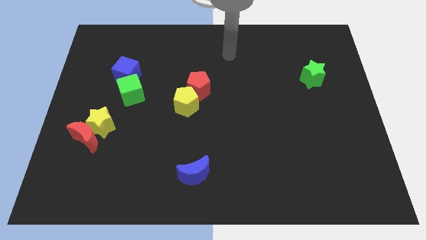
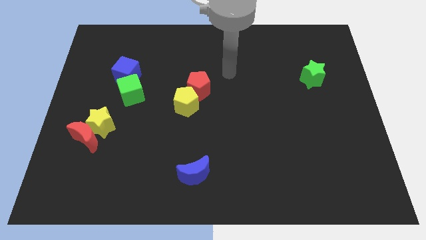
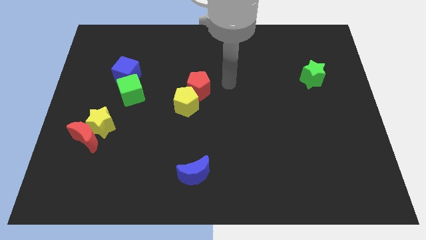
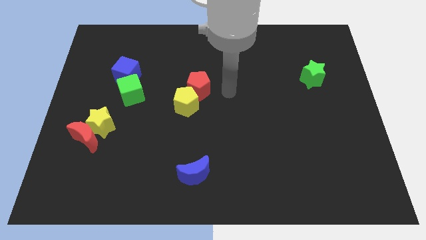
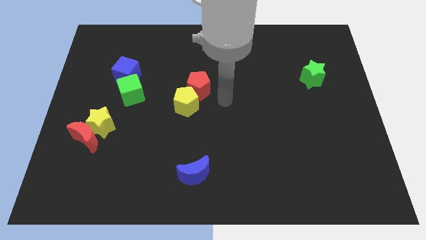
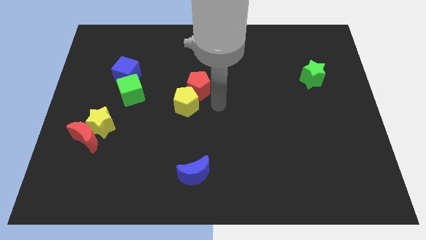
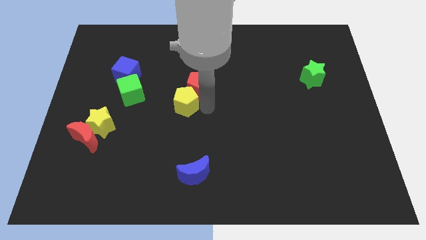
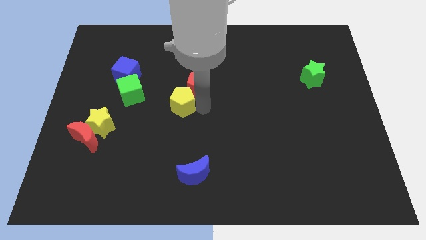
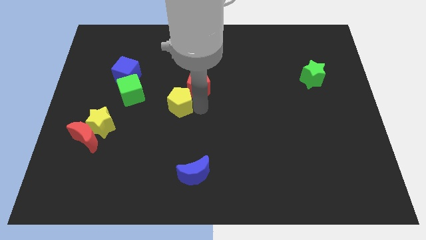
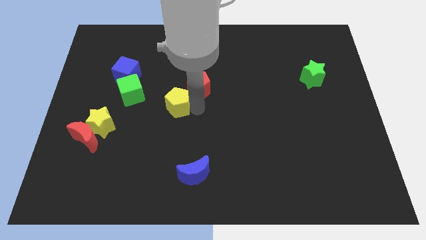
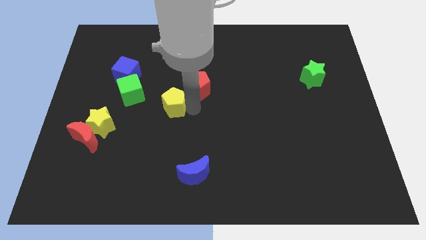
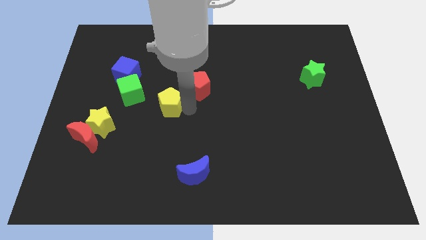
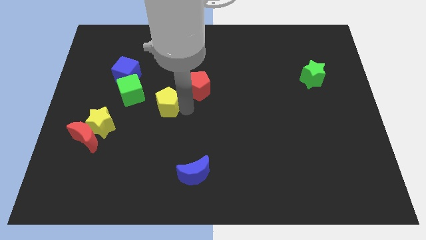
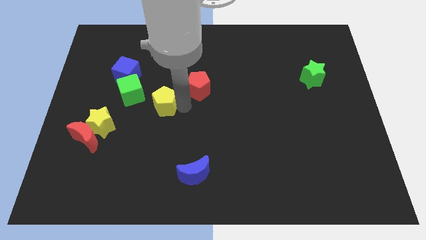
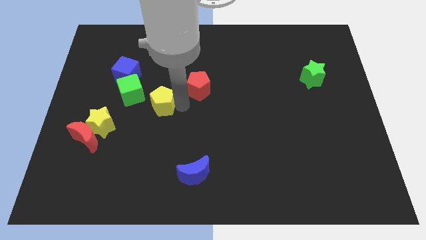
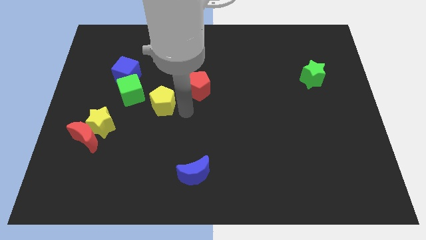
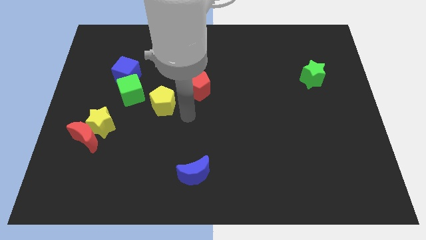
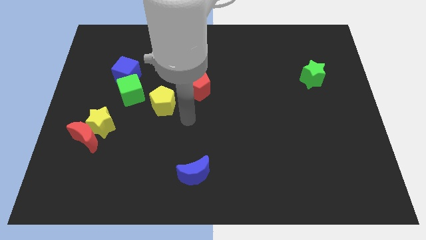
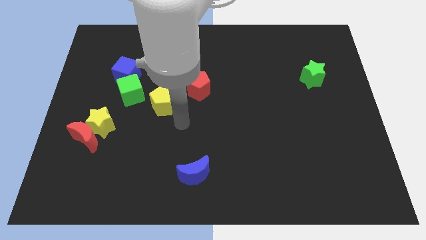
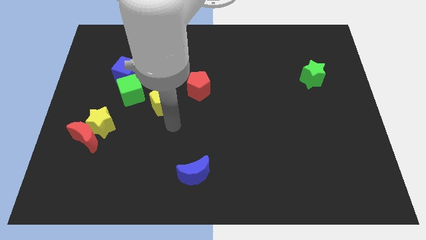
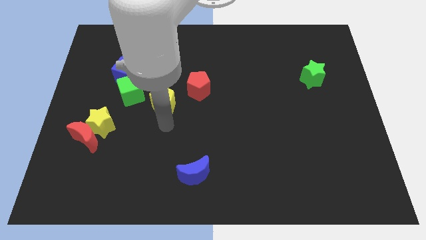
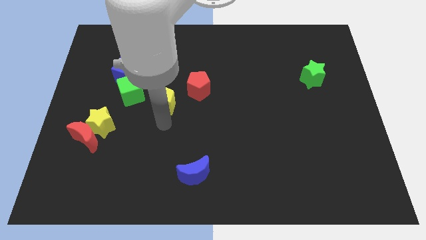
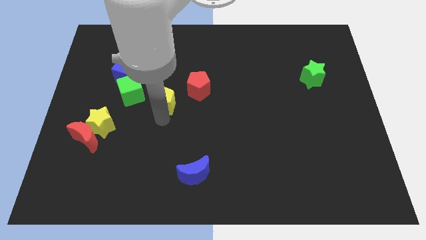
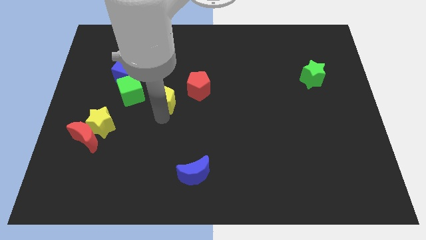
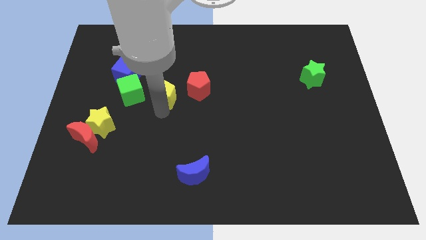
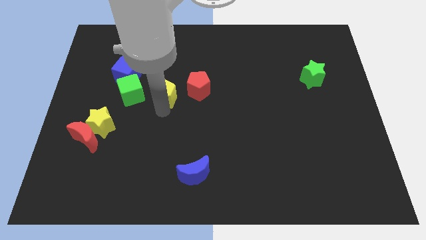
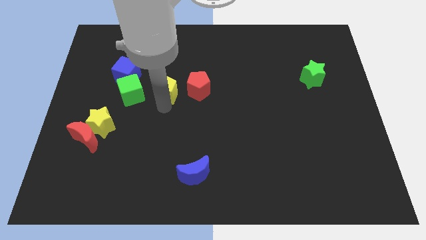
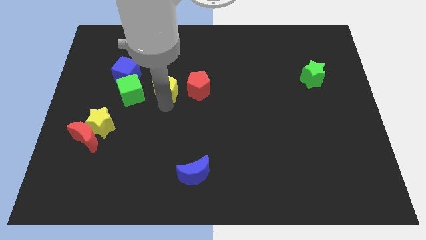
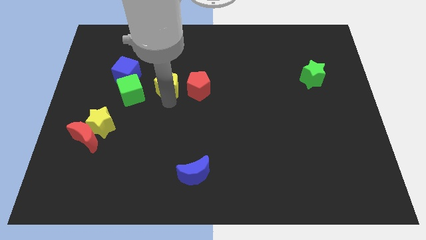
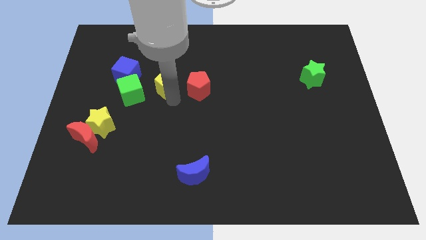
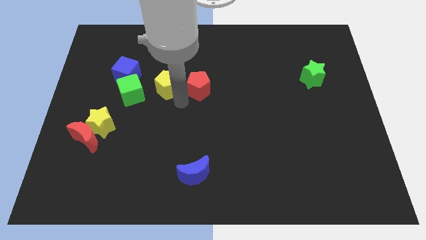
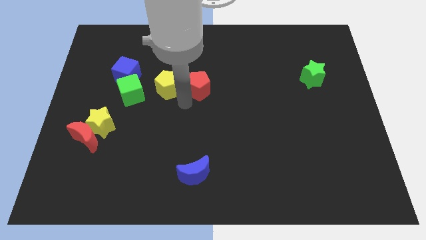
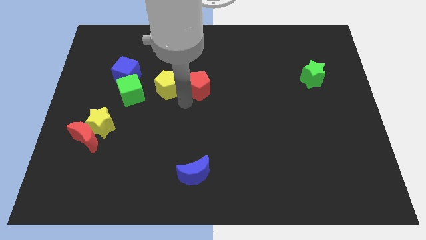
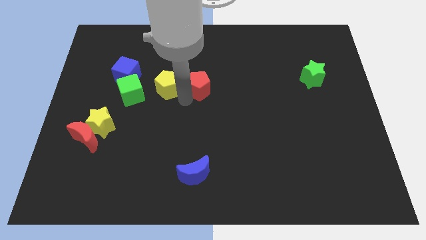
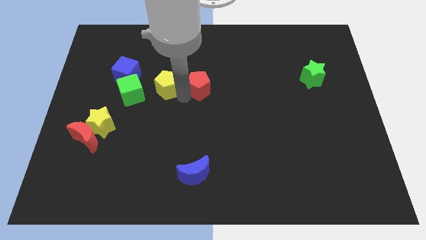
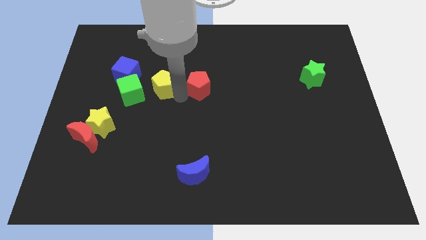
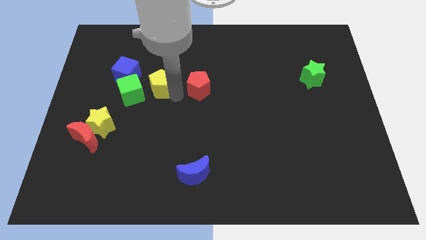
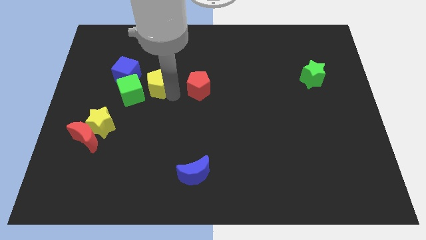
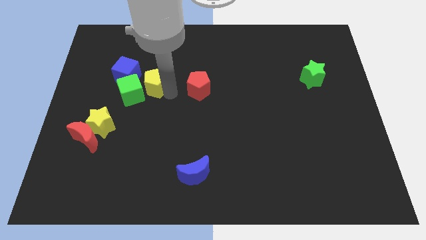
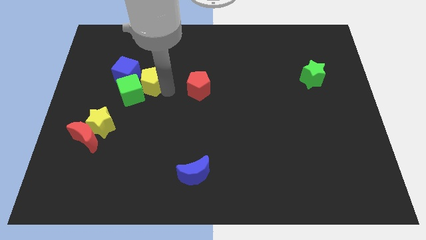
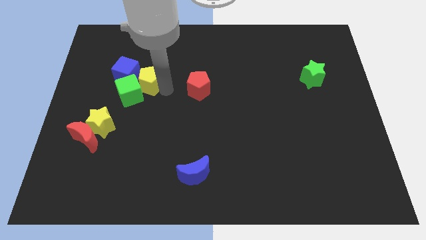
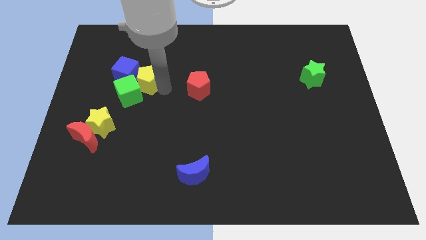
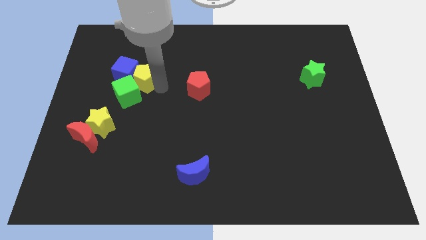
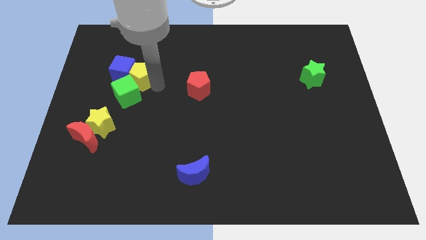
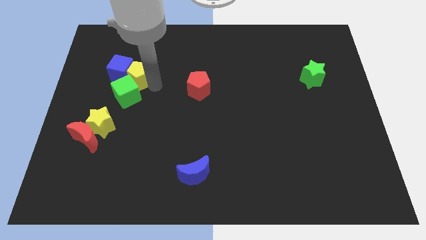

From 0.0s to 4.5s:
move the yellow pentagon next to the blue cube

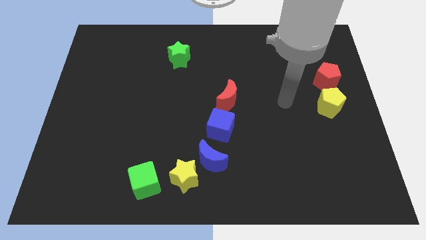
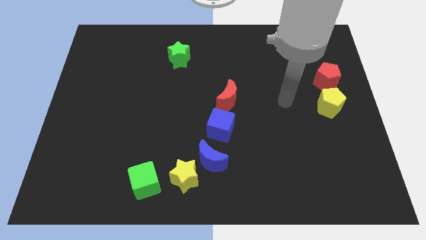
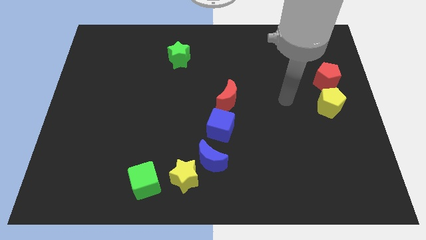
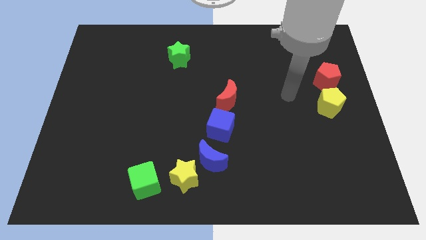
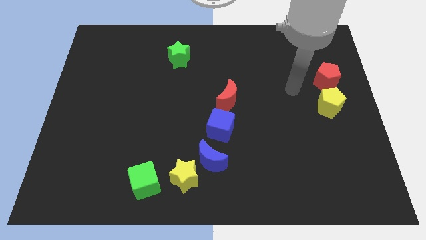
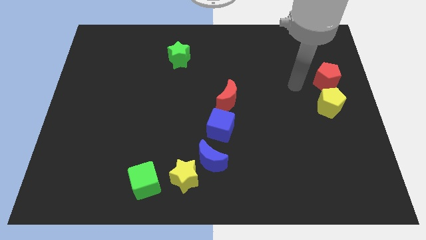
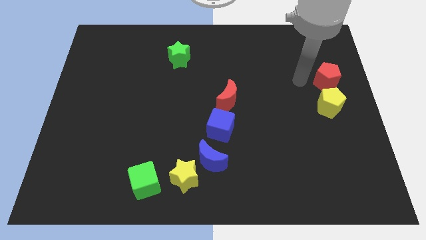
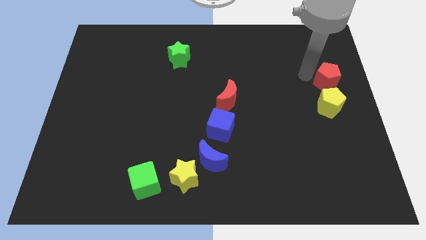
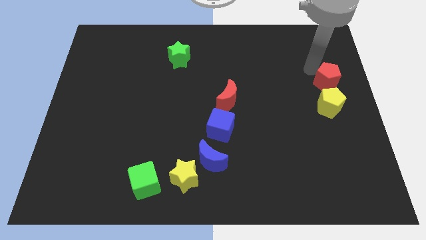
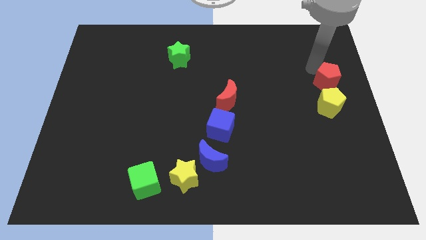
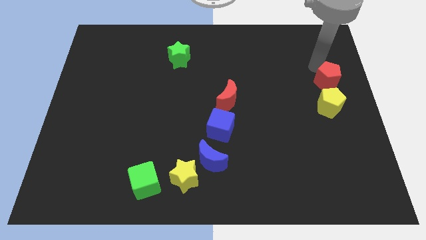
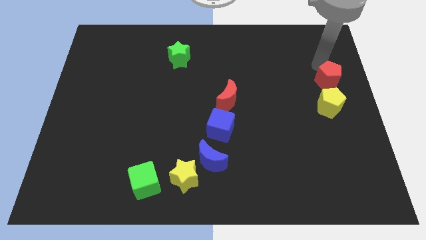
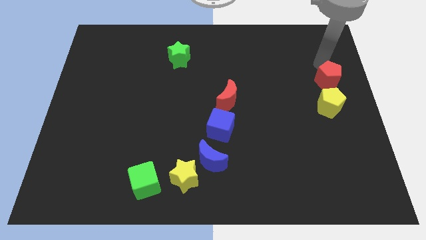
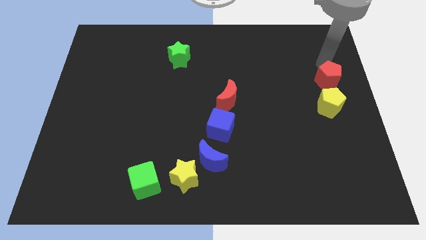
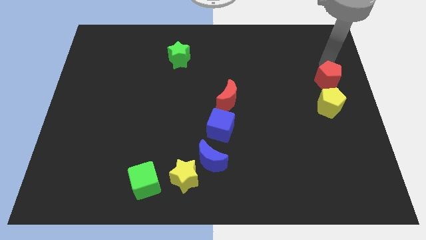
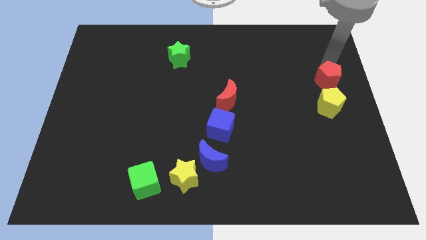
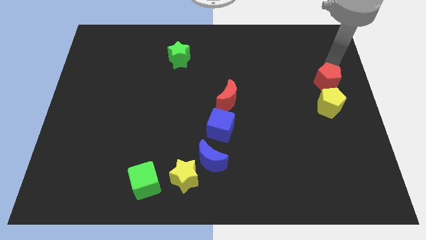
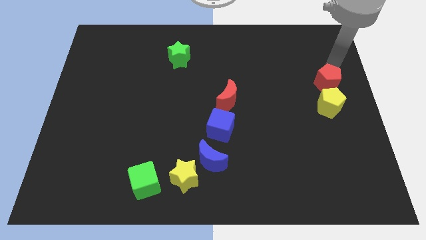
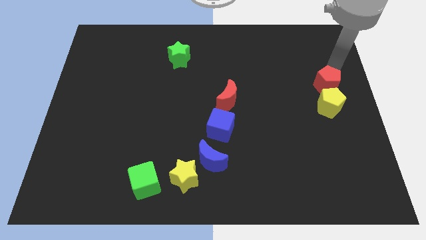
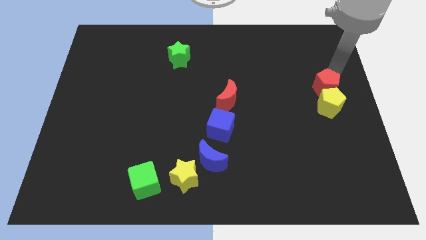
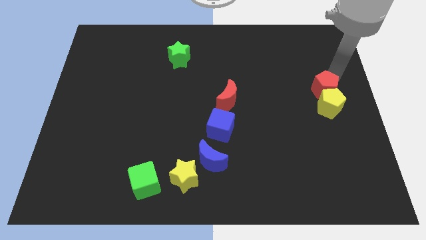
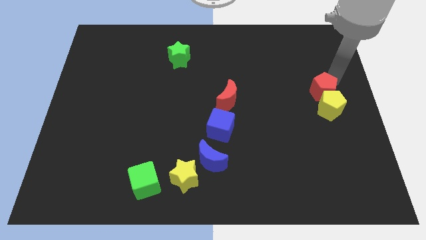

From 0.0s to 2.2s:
put the red pentagon towards the yellow pentagon

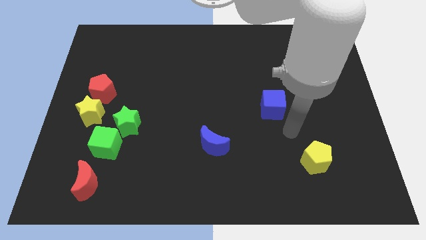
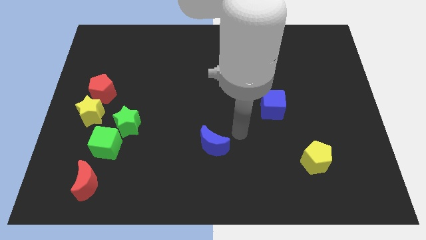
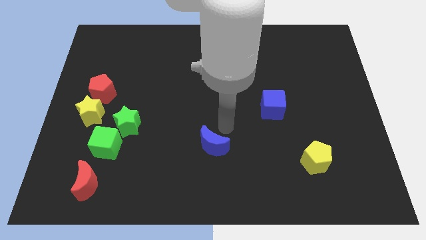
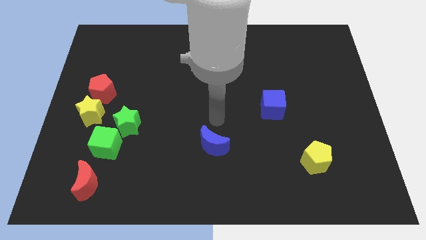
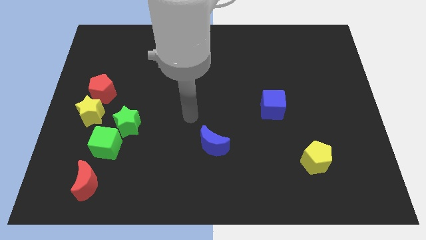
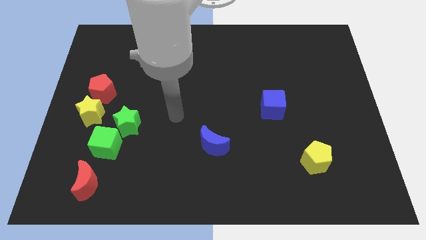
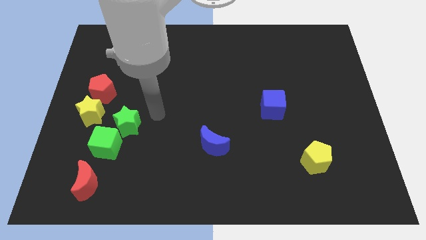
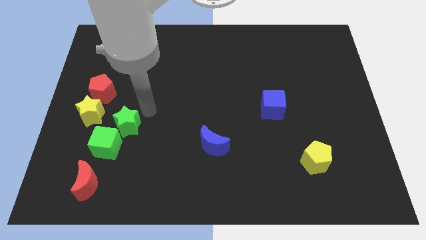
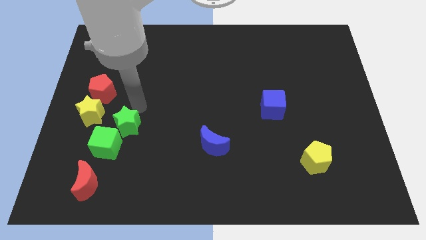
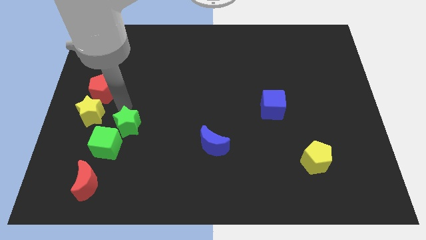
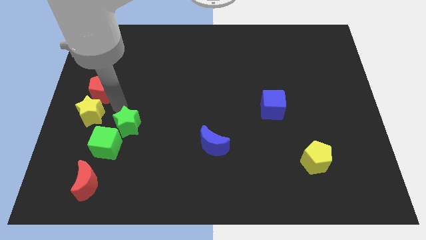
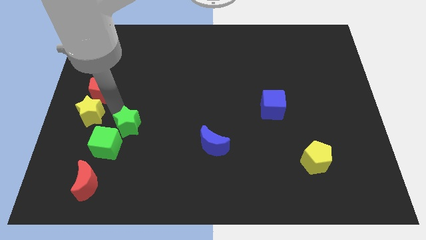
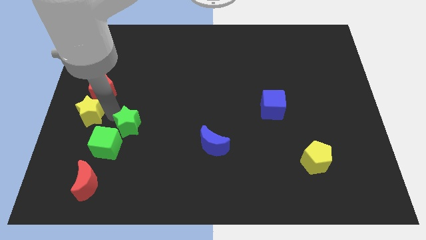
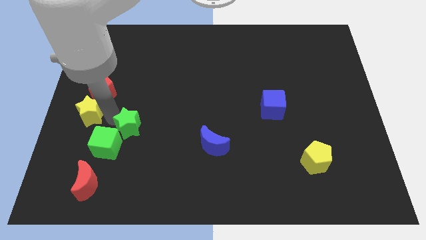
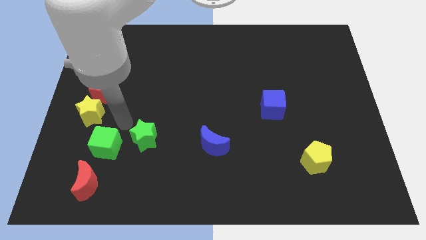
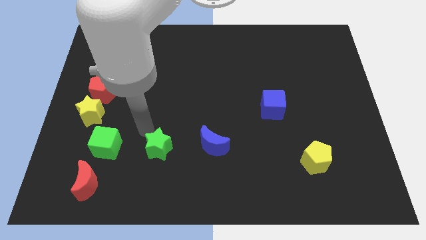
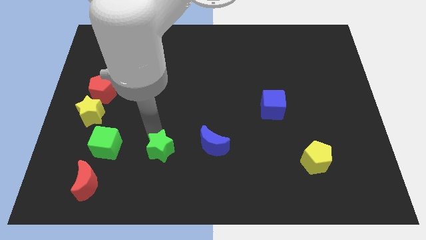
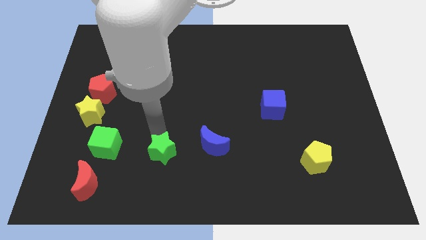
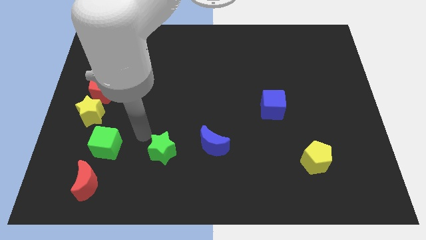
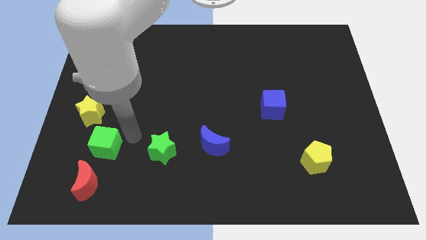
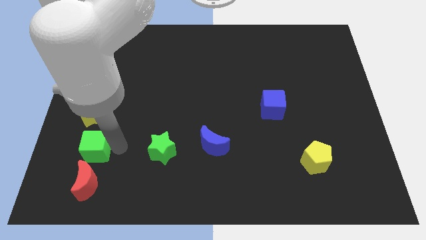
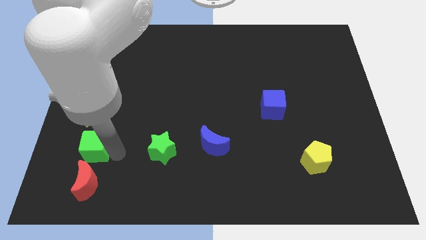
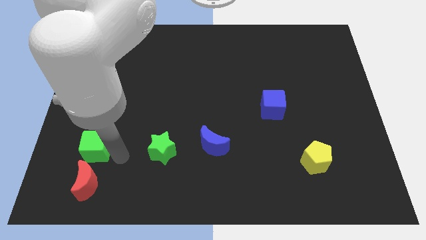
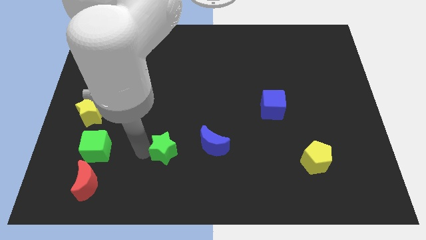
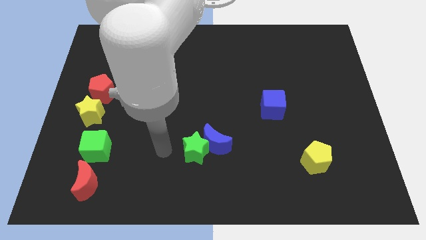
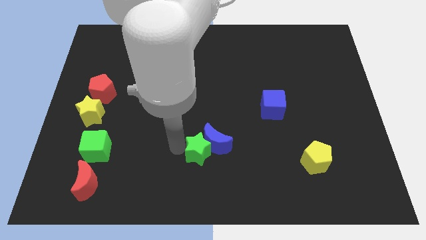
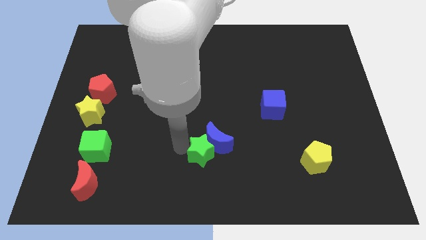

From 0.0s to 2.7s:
push the green star next to the blue moon
